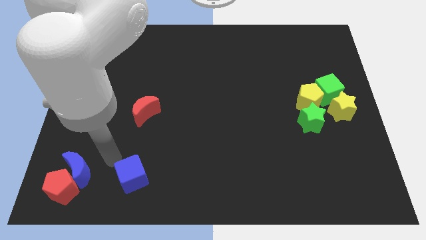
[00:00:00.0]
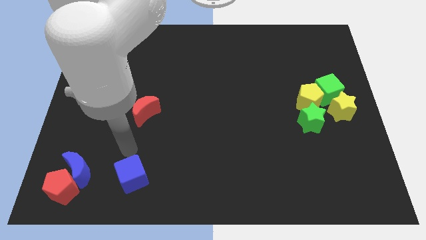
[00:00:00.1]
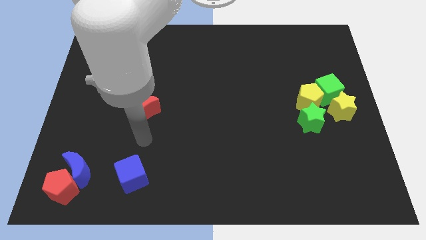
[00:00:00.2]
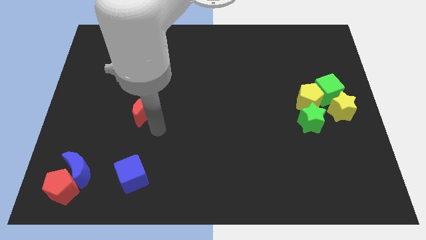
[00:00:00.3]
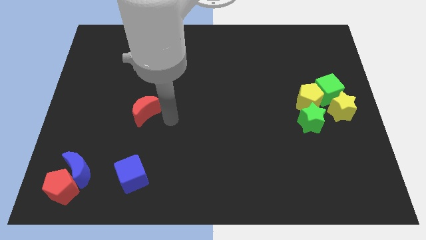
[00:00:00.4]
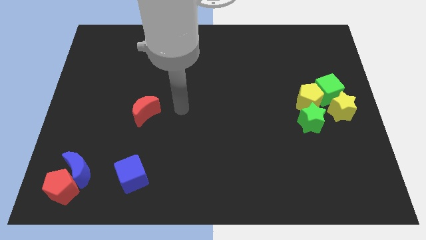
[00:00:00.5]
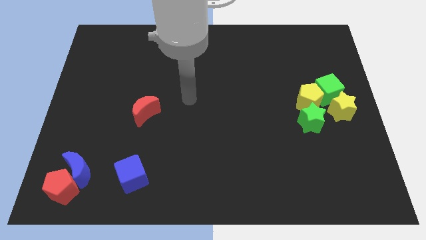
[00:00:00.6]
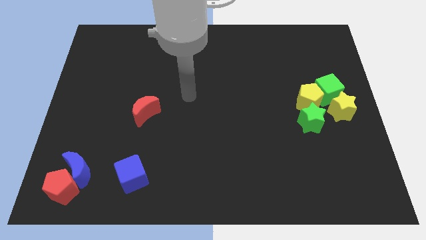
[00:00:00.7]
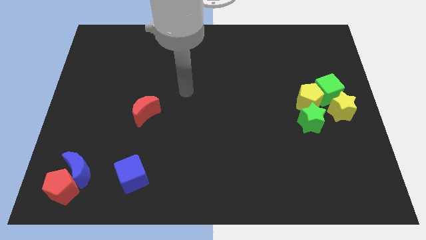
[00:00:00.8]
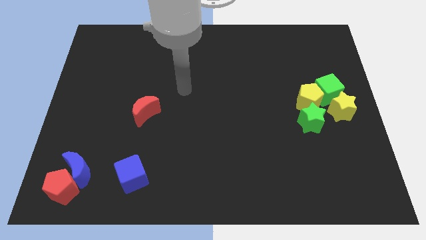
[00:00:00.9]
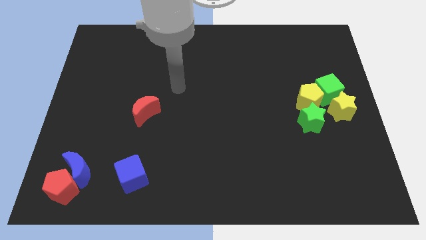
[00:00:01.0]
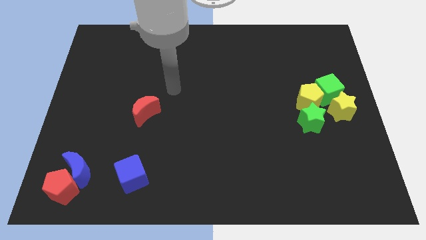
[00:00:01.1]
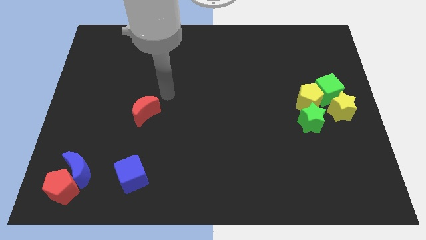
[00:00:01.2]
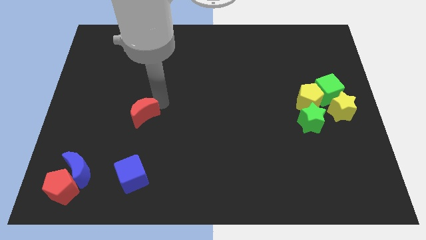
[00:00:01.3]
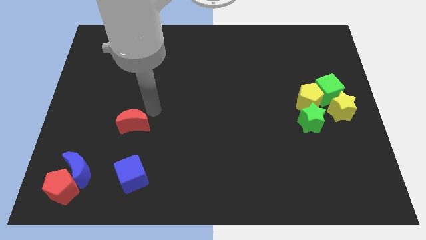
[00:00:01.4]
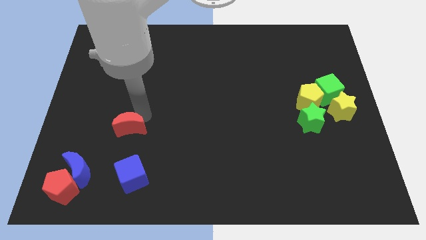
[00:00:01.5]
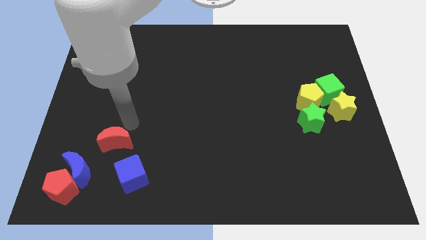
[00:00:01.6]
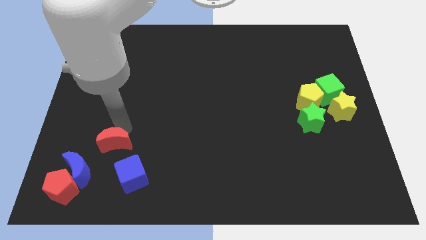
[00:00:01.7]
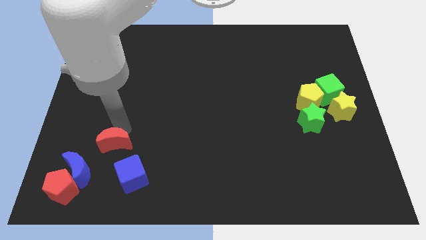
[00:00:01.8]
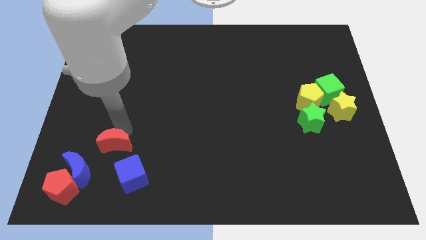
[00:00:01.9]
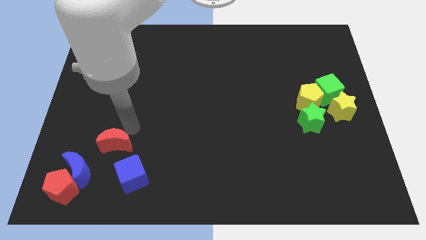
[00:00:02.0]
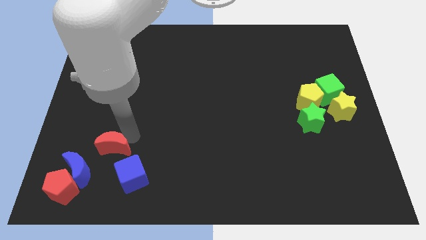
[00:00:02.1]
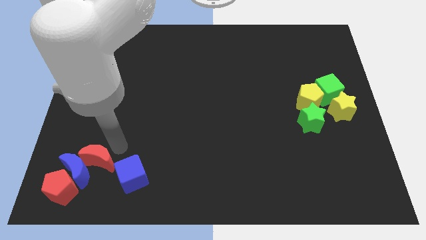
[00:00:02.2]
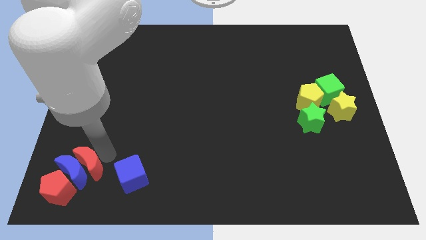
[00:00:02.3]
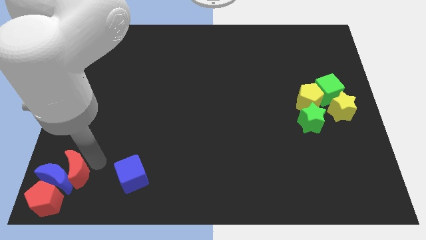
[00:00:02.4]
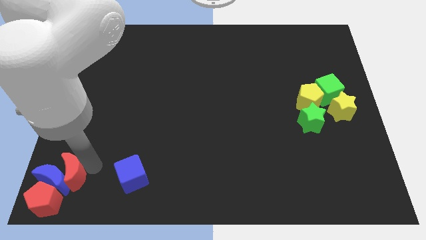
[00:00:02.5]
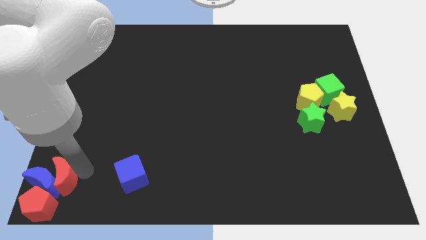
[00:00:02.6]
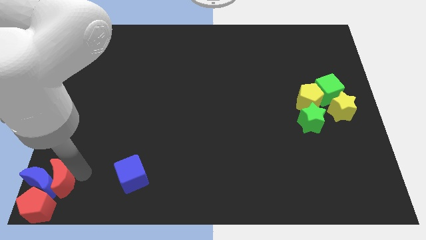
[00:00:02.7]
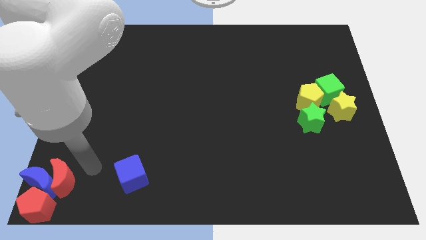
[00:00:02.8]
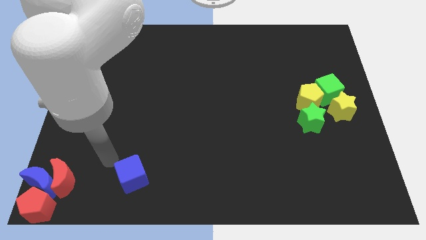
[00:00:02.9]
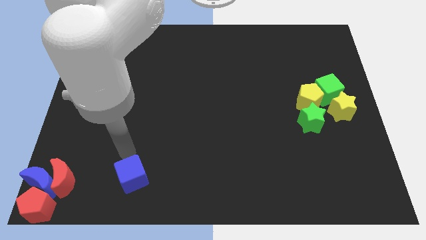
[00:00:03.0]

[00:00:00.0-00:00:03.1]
push the red moon into the blue moon

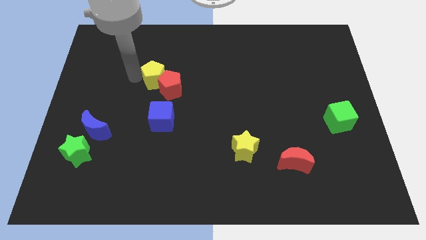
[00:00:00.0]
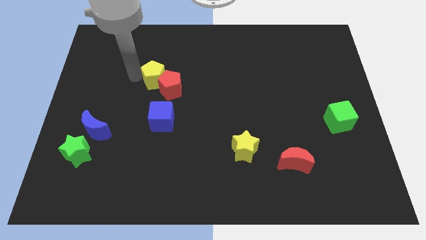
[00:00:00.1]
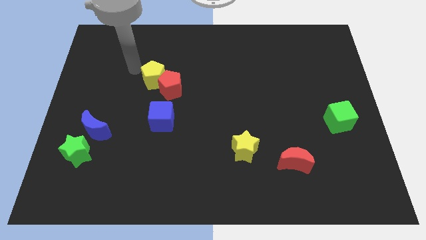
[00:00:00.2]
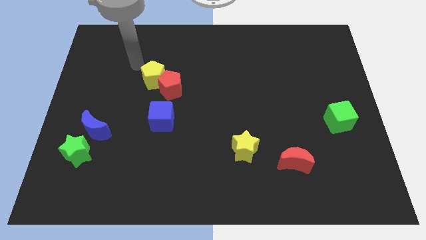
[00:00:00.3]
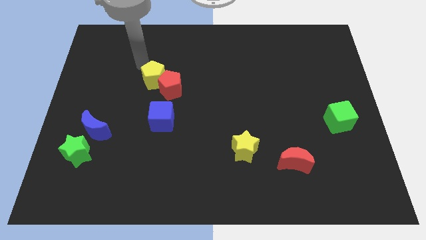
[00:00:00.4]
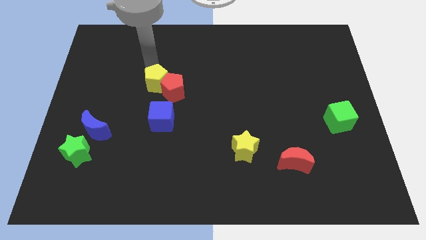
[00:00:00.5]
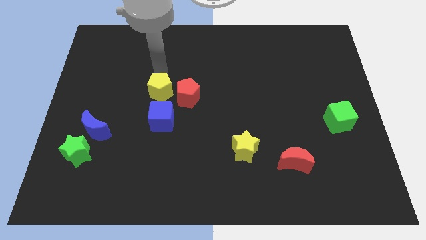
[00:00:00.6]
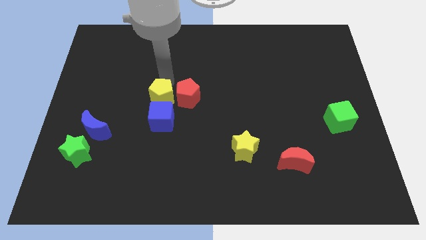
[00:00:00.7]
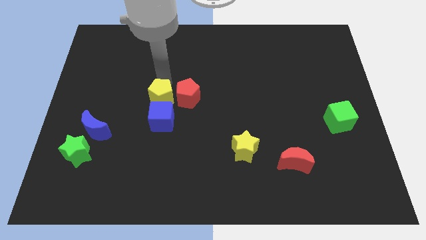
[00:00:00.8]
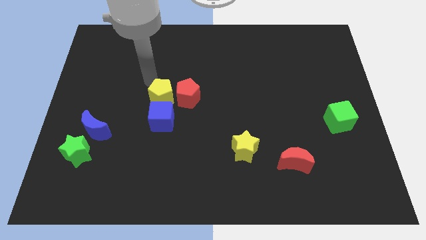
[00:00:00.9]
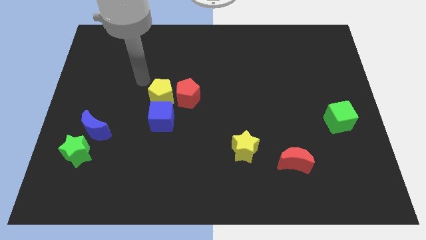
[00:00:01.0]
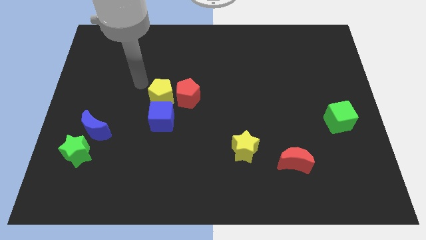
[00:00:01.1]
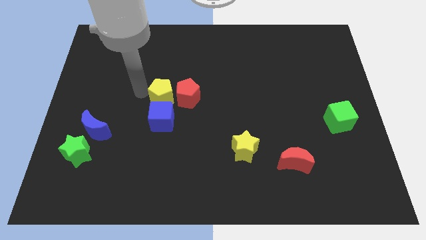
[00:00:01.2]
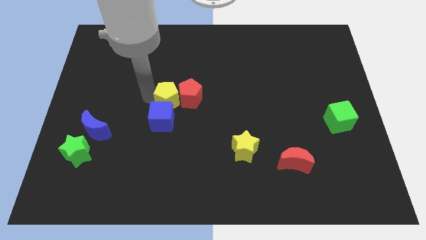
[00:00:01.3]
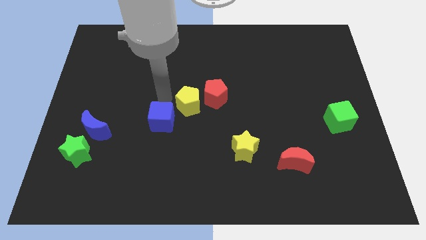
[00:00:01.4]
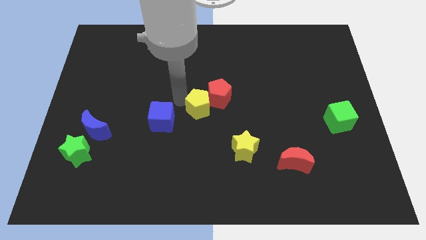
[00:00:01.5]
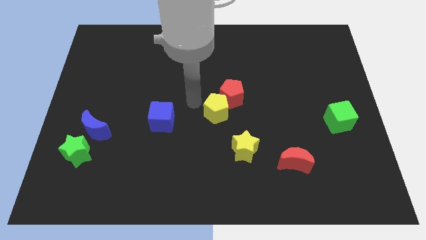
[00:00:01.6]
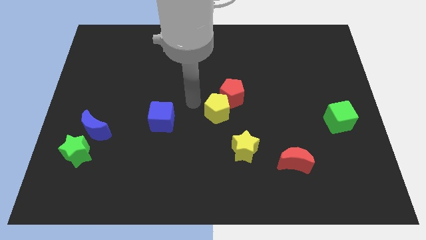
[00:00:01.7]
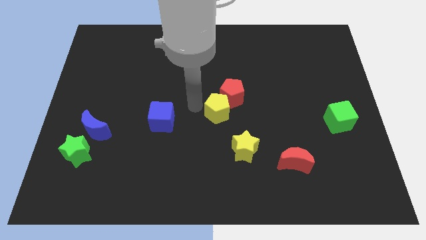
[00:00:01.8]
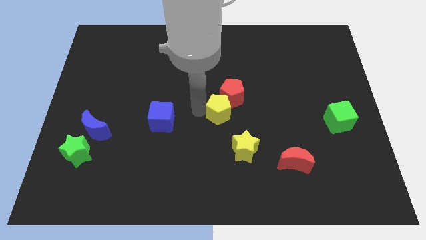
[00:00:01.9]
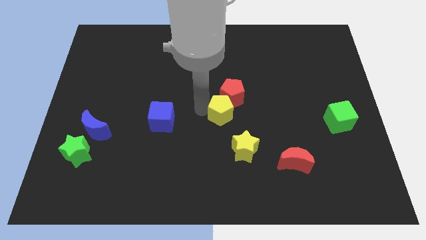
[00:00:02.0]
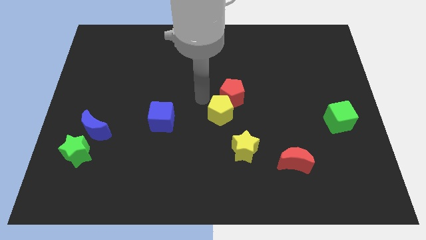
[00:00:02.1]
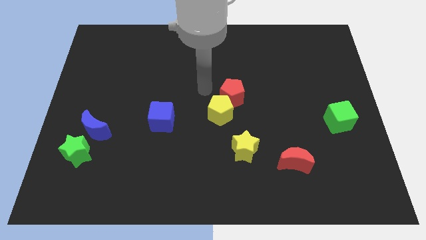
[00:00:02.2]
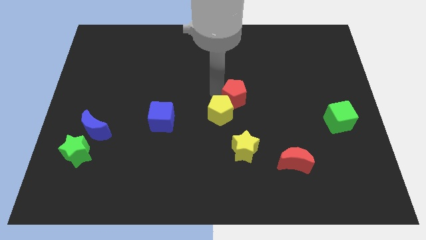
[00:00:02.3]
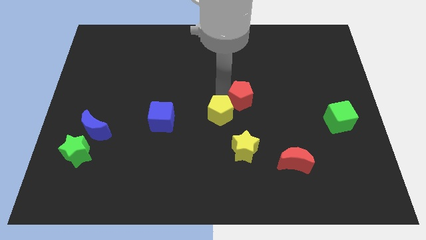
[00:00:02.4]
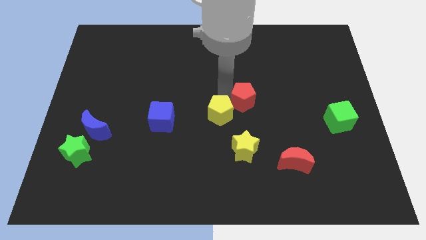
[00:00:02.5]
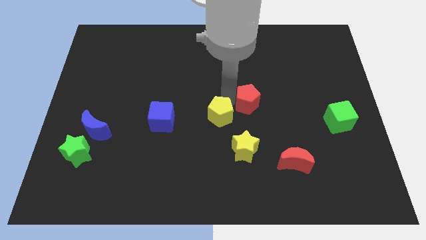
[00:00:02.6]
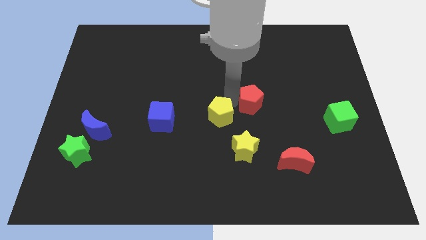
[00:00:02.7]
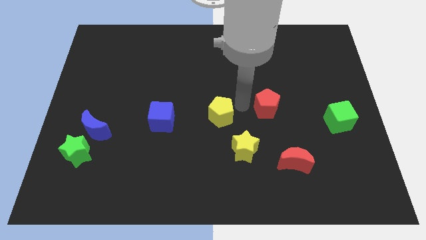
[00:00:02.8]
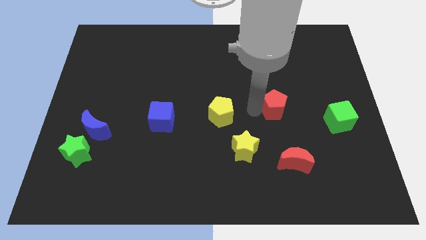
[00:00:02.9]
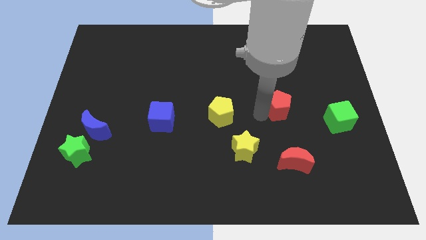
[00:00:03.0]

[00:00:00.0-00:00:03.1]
separate red and yellow pentagons from cube

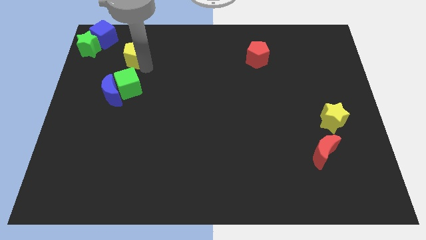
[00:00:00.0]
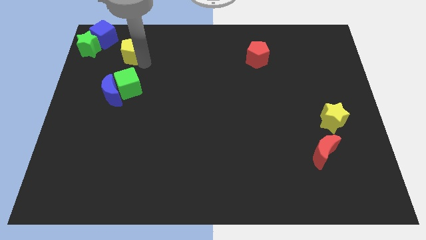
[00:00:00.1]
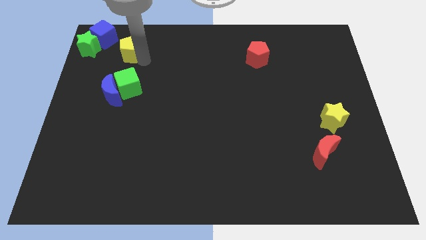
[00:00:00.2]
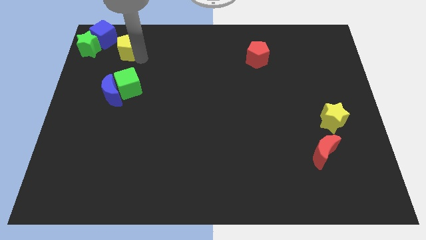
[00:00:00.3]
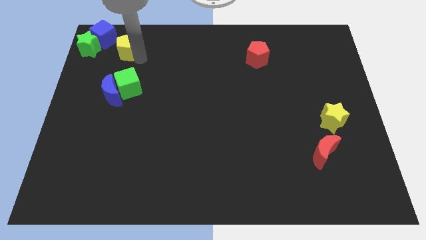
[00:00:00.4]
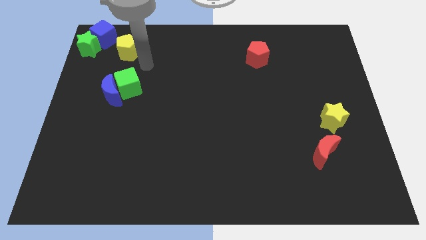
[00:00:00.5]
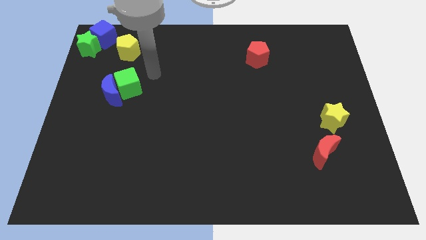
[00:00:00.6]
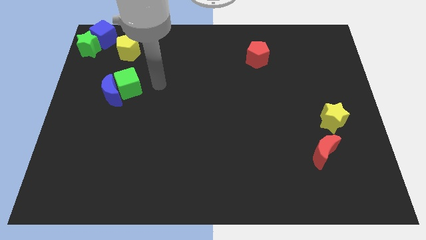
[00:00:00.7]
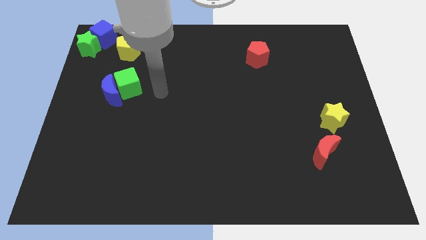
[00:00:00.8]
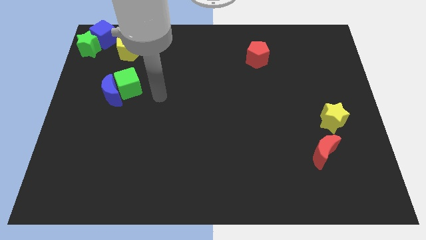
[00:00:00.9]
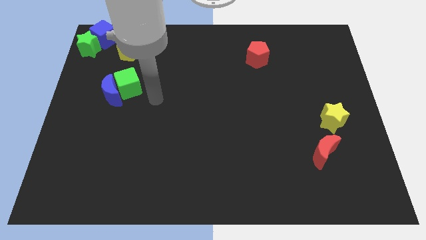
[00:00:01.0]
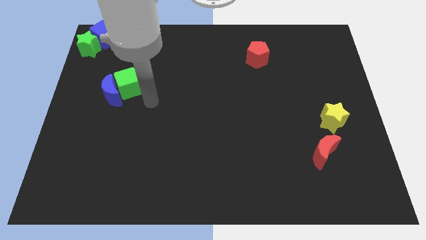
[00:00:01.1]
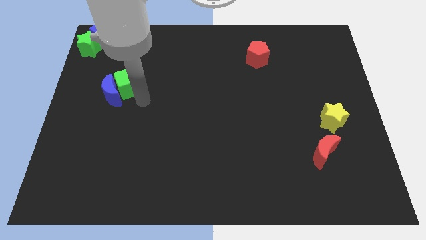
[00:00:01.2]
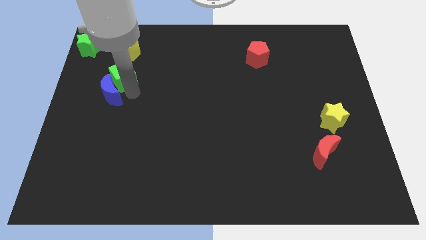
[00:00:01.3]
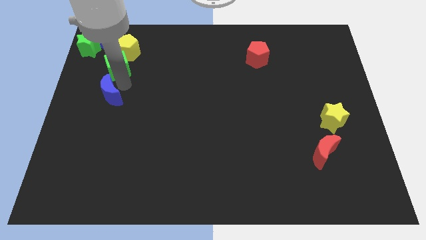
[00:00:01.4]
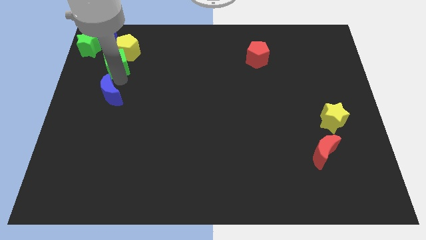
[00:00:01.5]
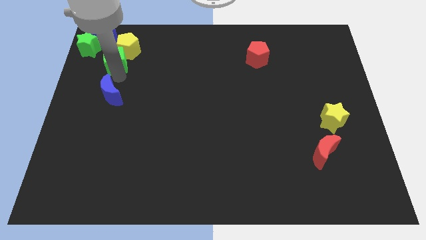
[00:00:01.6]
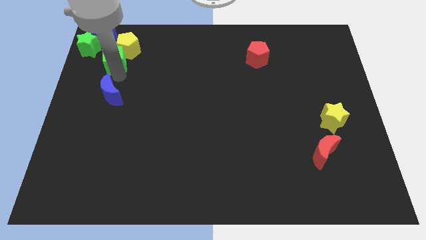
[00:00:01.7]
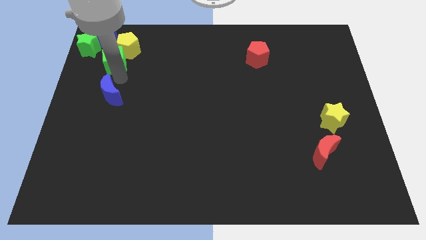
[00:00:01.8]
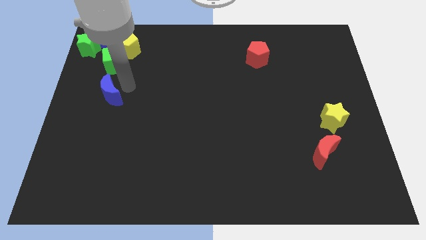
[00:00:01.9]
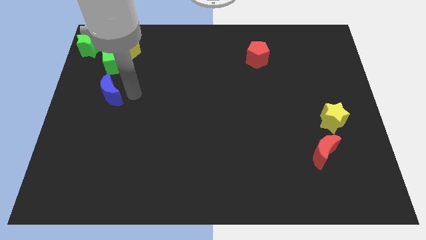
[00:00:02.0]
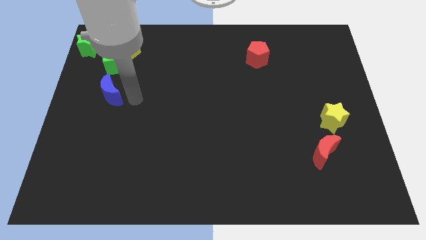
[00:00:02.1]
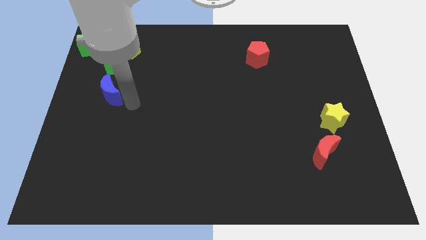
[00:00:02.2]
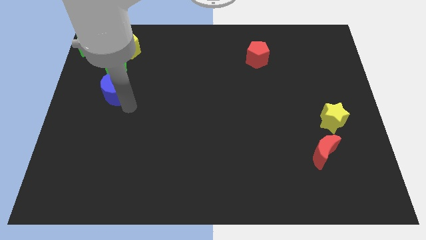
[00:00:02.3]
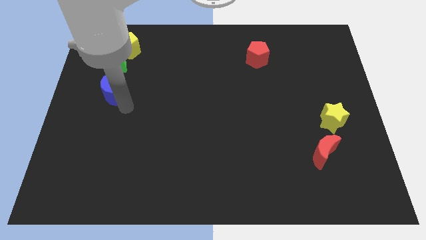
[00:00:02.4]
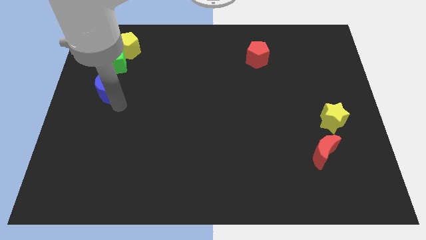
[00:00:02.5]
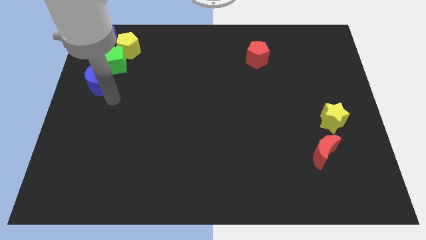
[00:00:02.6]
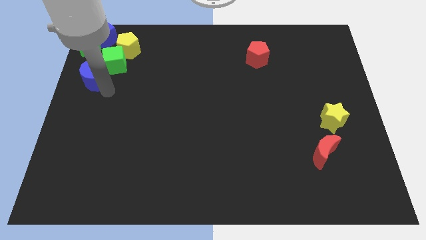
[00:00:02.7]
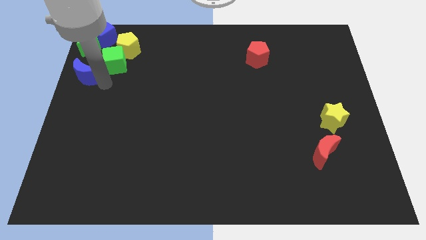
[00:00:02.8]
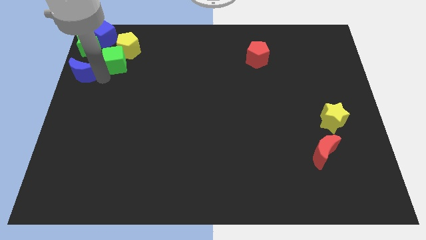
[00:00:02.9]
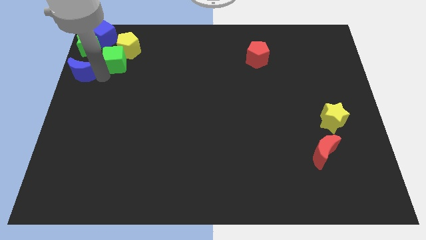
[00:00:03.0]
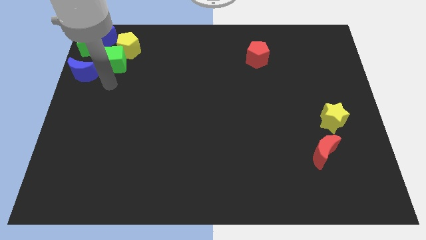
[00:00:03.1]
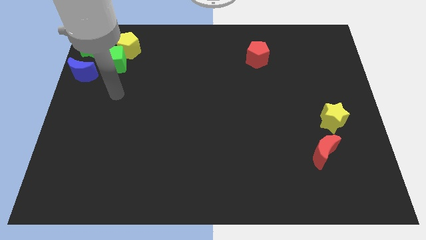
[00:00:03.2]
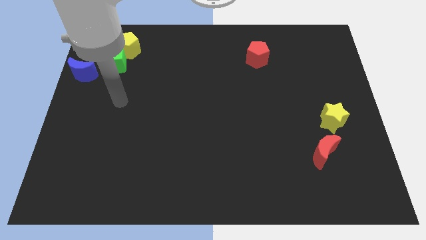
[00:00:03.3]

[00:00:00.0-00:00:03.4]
make a group of green blocks blue blocks and yellow pentagon at the top left corner
